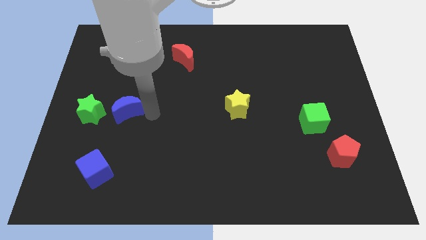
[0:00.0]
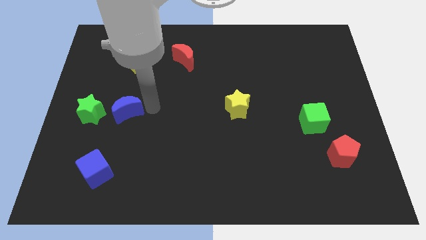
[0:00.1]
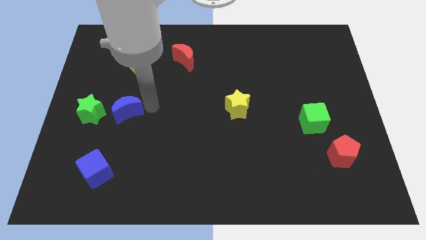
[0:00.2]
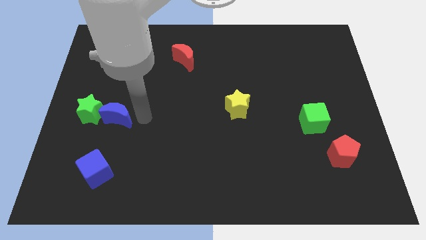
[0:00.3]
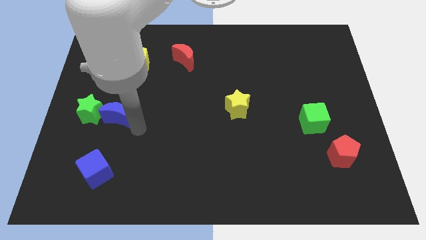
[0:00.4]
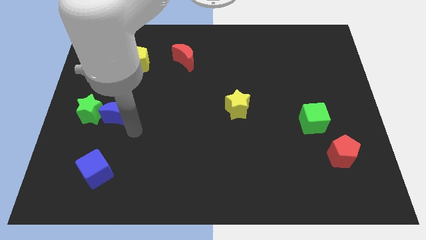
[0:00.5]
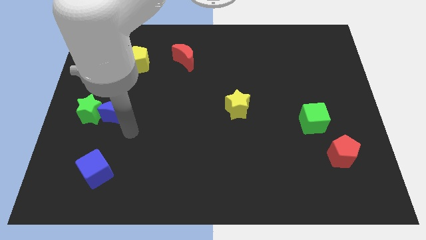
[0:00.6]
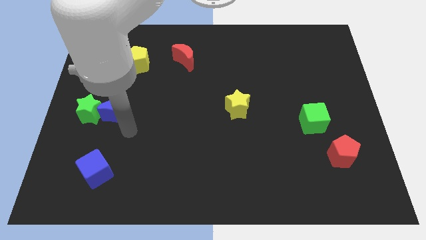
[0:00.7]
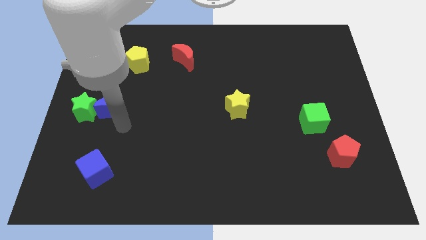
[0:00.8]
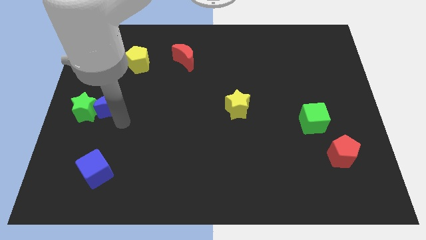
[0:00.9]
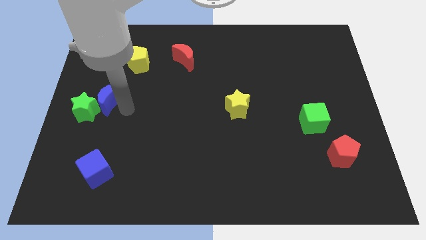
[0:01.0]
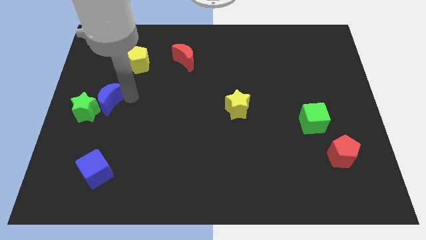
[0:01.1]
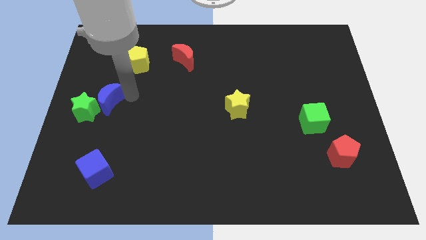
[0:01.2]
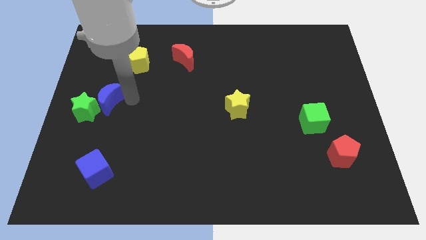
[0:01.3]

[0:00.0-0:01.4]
move the blue crescent to the right of the green star

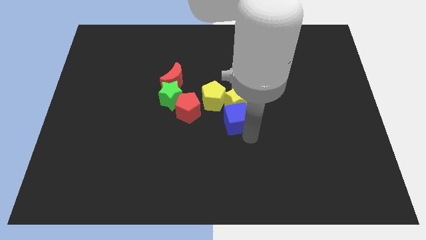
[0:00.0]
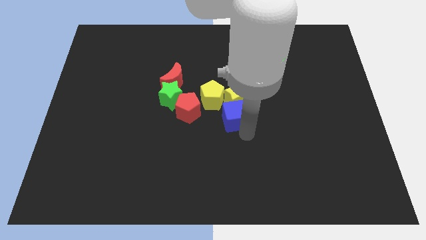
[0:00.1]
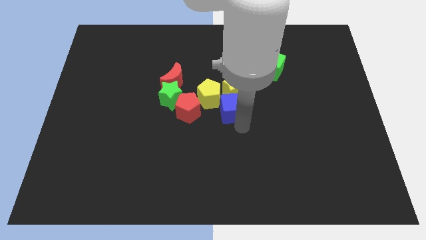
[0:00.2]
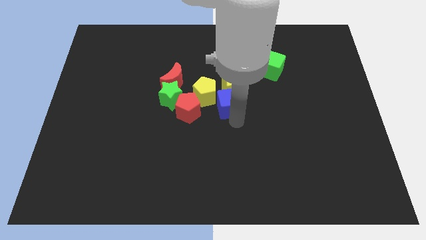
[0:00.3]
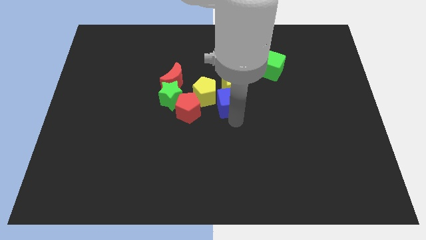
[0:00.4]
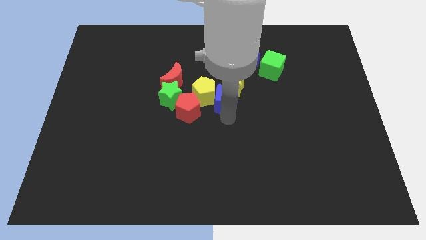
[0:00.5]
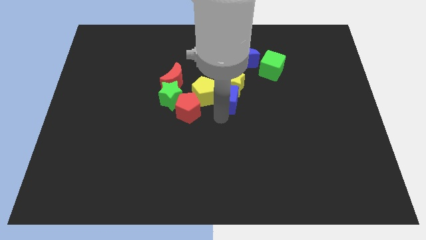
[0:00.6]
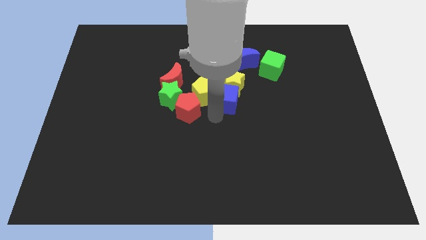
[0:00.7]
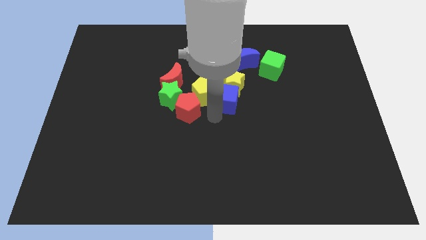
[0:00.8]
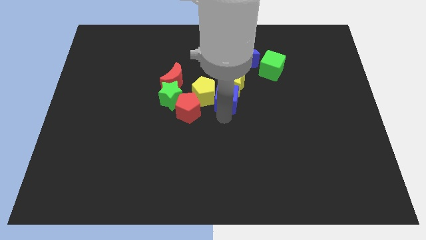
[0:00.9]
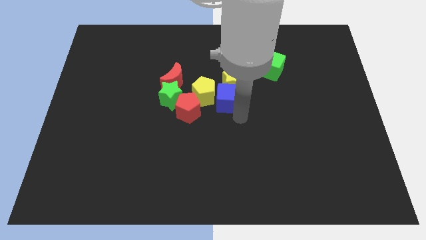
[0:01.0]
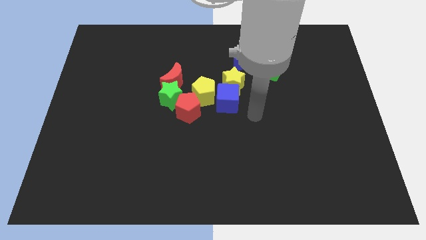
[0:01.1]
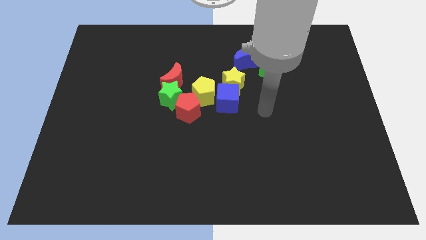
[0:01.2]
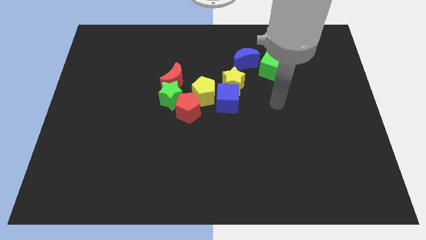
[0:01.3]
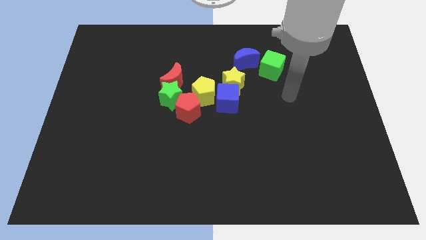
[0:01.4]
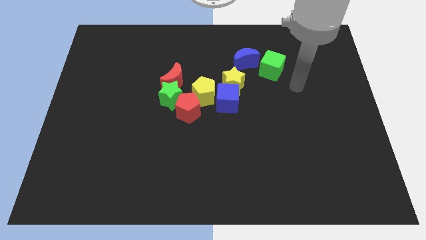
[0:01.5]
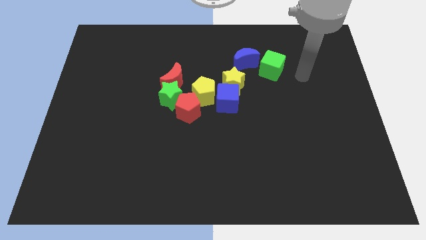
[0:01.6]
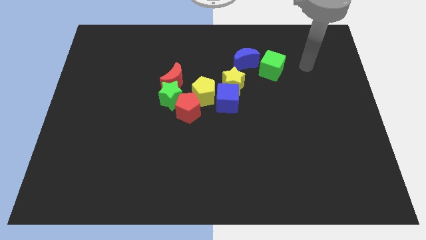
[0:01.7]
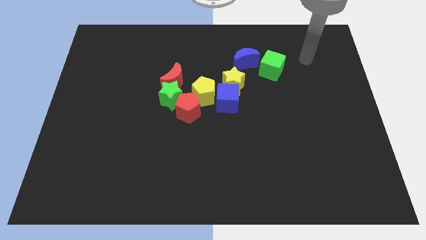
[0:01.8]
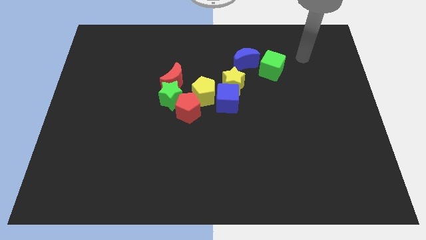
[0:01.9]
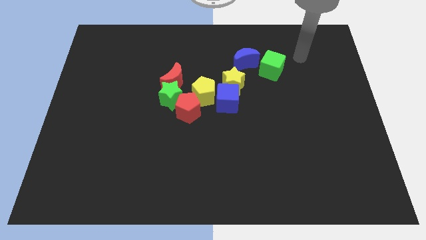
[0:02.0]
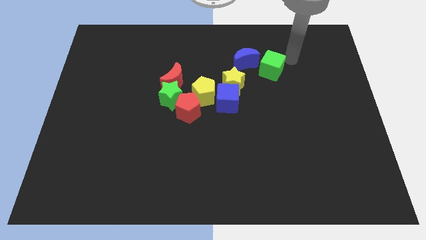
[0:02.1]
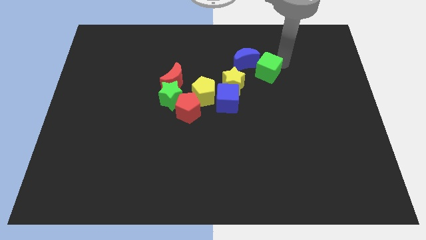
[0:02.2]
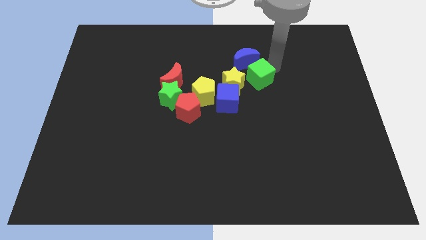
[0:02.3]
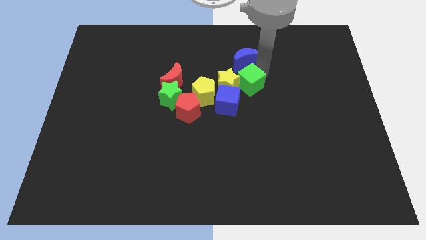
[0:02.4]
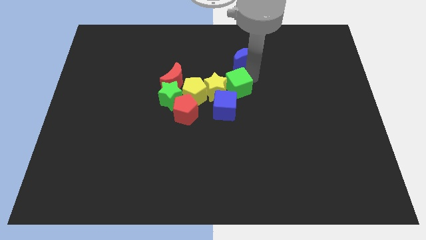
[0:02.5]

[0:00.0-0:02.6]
move the green cube into the yellow star towards the center

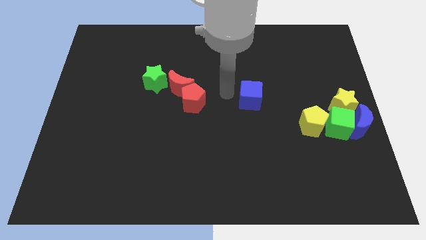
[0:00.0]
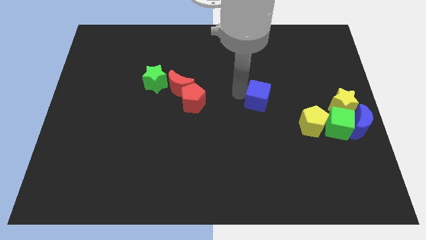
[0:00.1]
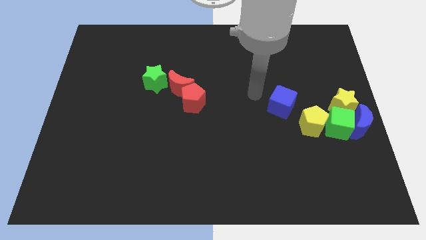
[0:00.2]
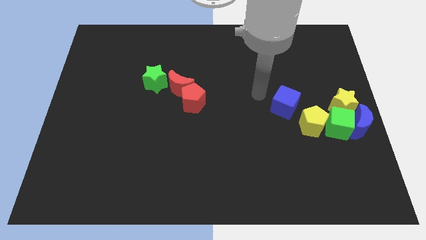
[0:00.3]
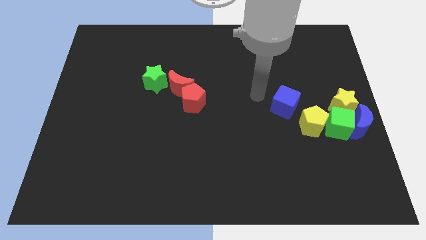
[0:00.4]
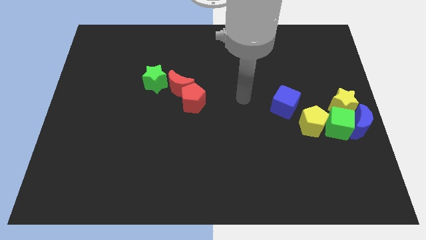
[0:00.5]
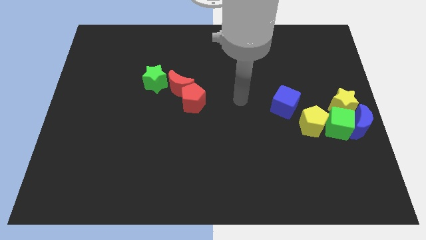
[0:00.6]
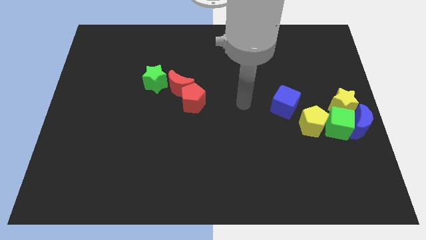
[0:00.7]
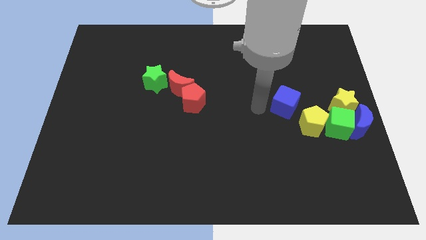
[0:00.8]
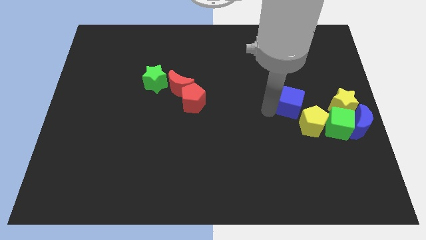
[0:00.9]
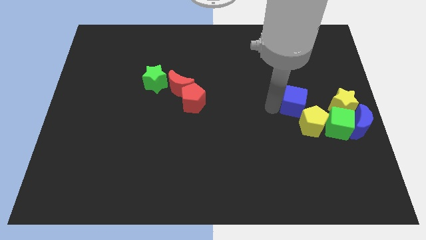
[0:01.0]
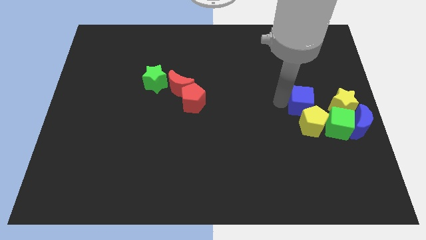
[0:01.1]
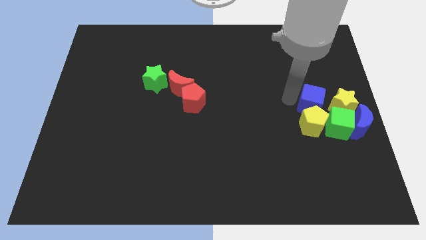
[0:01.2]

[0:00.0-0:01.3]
place the blue cube above the yellow pentagon

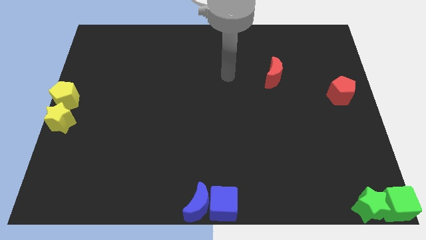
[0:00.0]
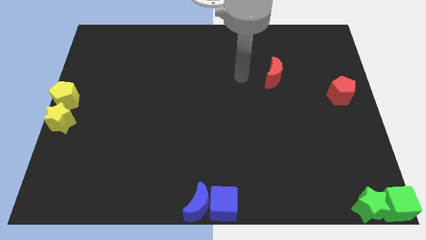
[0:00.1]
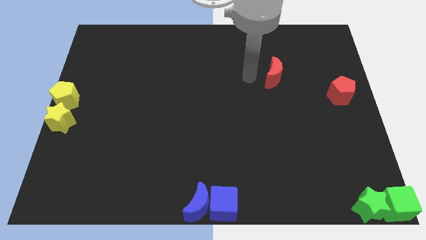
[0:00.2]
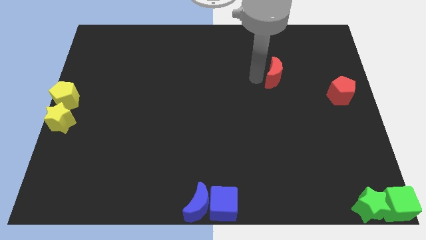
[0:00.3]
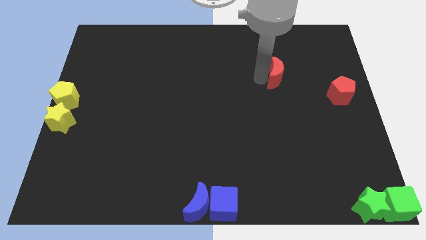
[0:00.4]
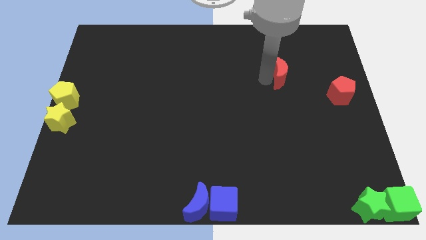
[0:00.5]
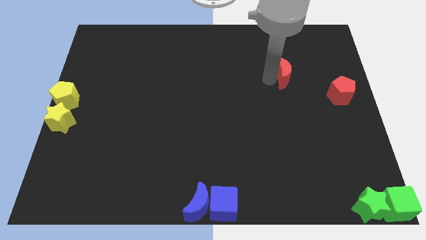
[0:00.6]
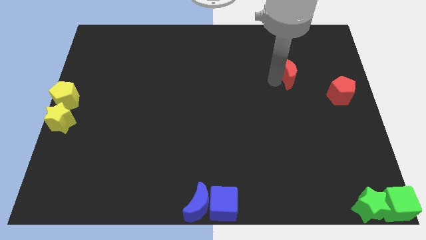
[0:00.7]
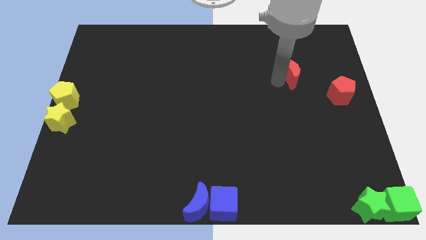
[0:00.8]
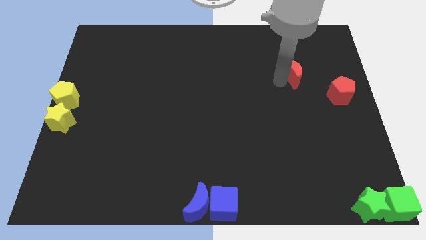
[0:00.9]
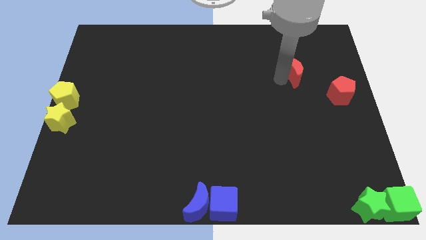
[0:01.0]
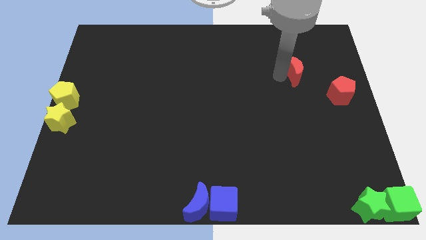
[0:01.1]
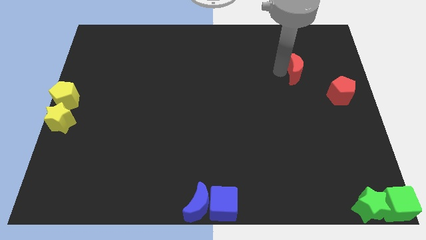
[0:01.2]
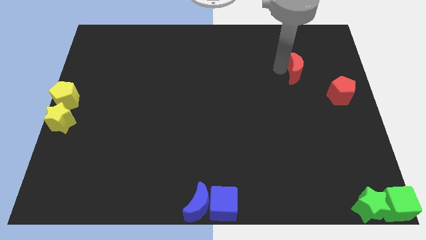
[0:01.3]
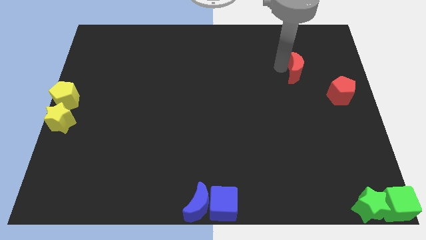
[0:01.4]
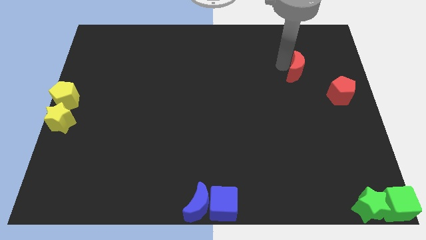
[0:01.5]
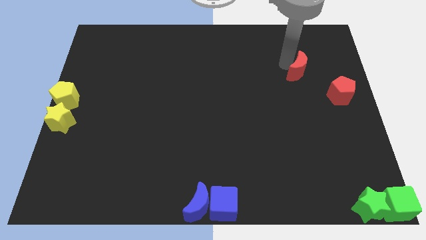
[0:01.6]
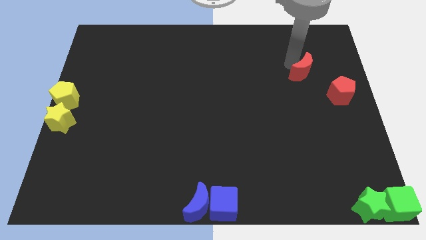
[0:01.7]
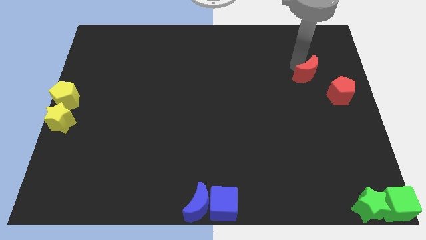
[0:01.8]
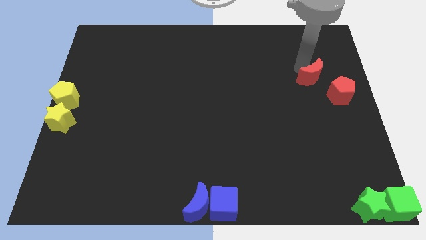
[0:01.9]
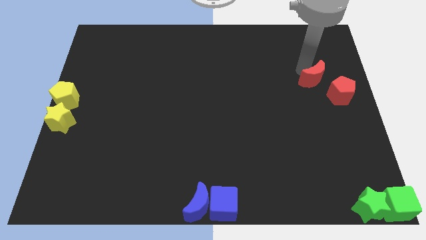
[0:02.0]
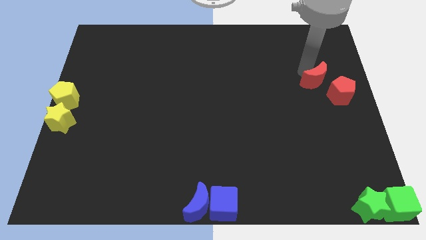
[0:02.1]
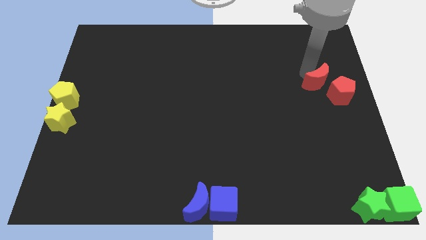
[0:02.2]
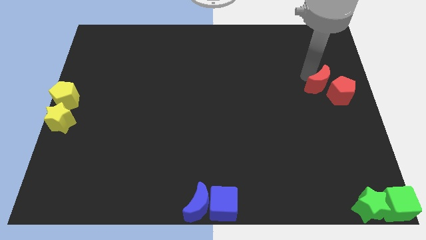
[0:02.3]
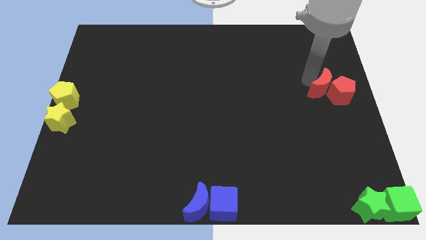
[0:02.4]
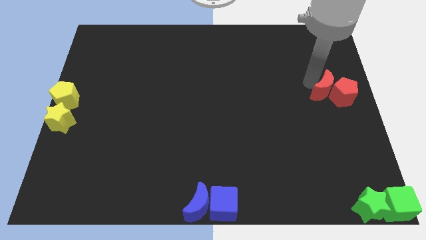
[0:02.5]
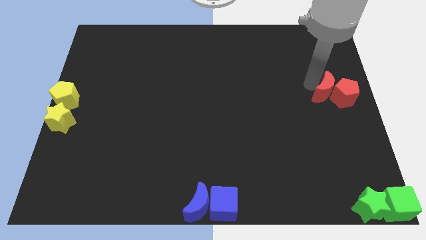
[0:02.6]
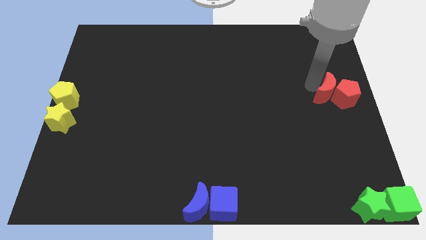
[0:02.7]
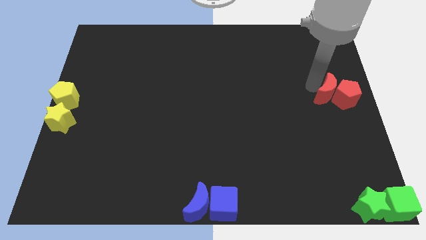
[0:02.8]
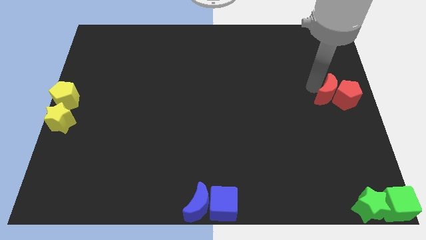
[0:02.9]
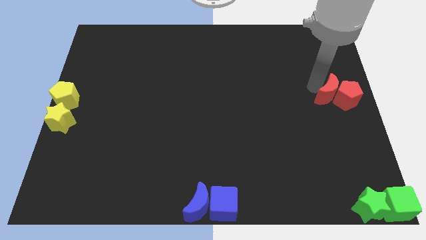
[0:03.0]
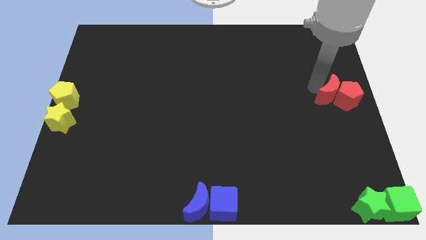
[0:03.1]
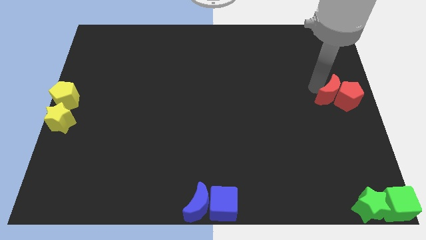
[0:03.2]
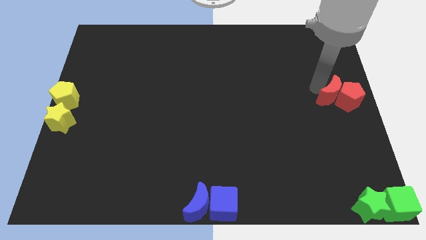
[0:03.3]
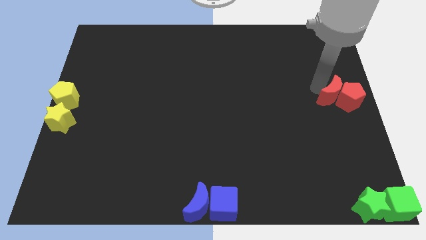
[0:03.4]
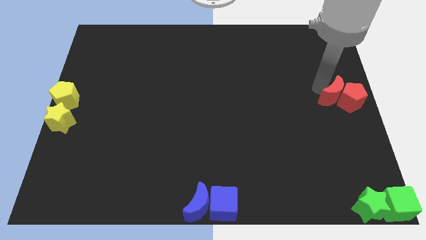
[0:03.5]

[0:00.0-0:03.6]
push the red moon into red pentagon

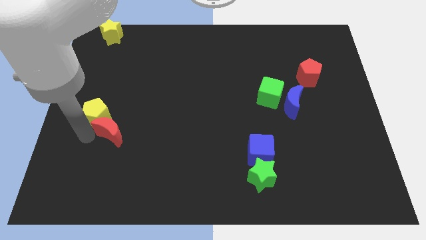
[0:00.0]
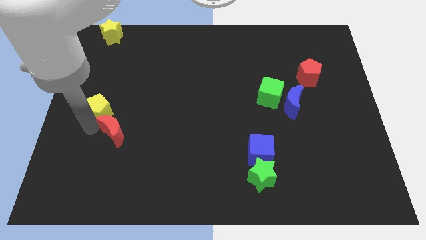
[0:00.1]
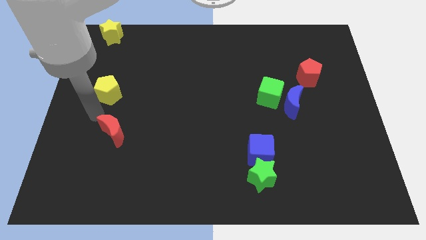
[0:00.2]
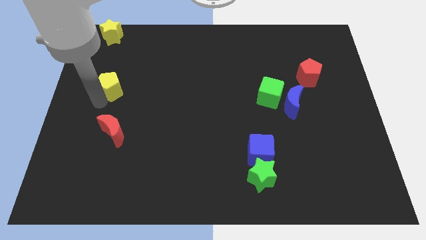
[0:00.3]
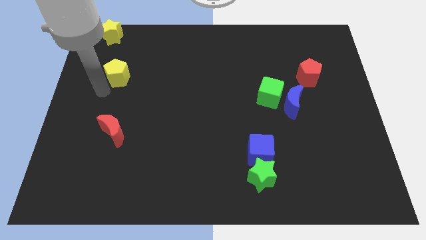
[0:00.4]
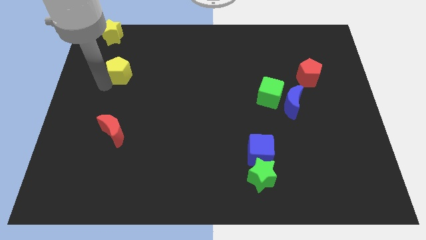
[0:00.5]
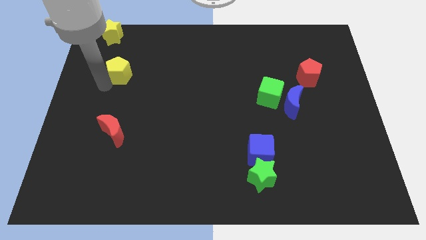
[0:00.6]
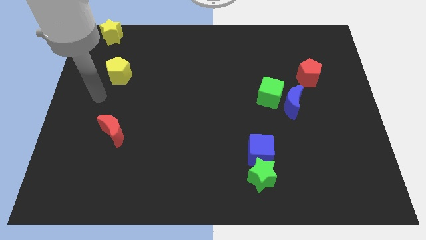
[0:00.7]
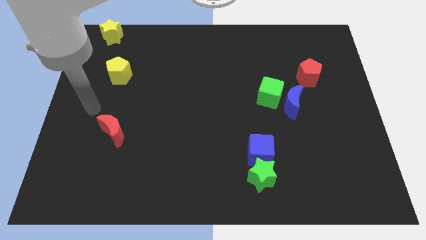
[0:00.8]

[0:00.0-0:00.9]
separate the yellow pentagon from the red moon
